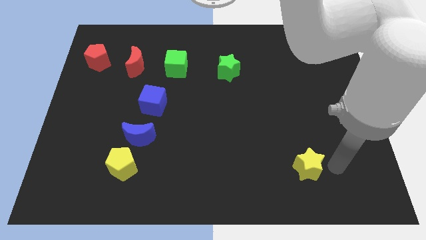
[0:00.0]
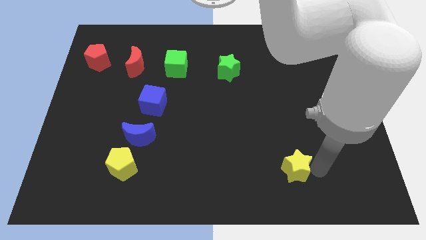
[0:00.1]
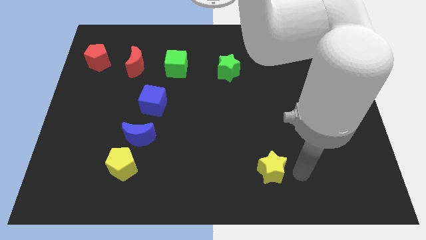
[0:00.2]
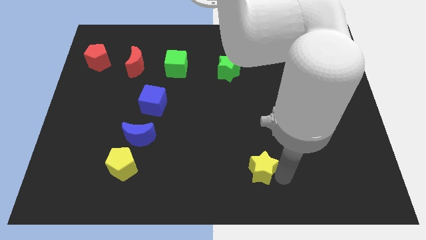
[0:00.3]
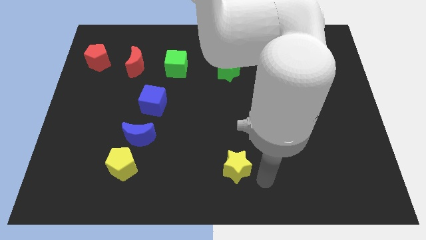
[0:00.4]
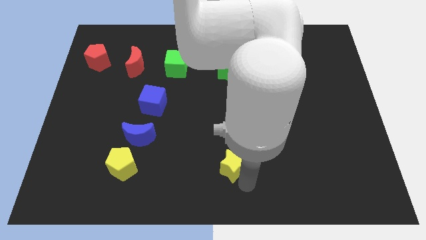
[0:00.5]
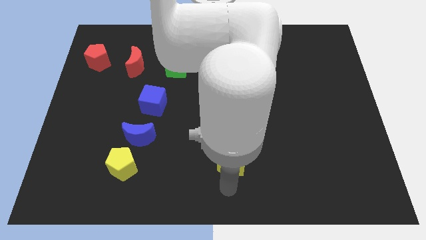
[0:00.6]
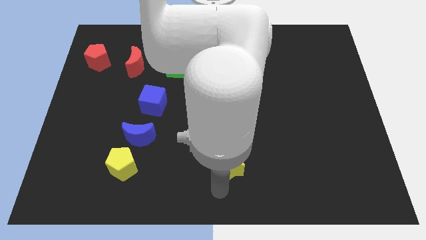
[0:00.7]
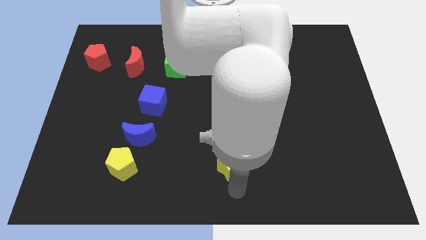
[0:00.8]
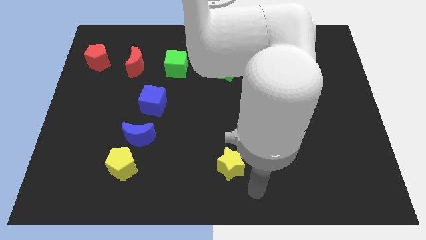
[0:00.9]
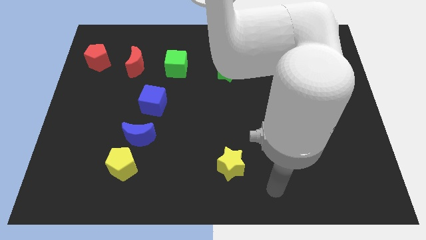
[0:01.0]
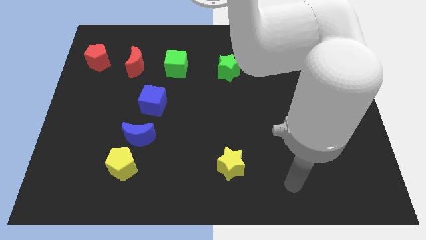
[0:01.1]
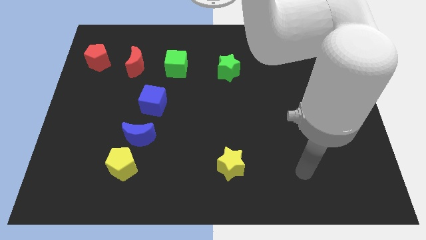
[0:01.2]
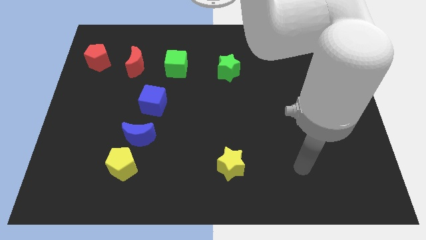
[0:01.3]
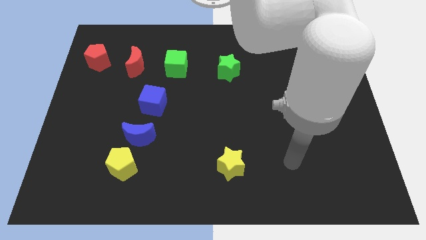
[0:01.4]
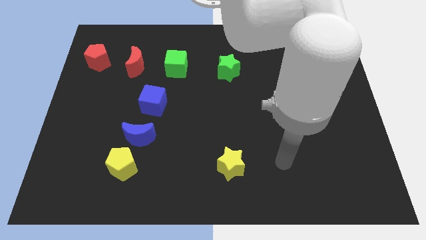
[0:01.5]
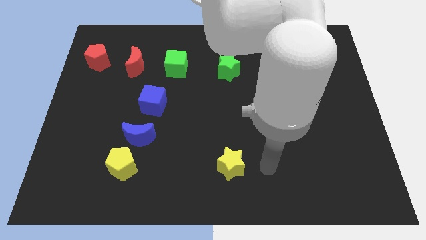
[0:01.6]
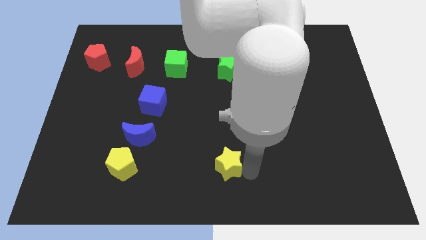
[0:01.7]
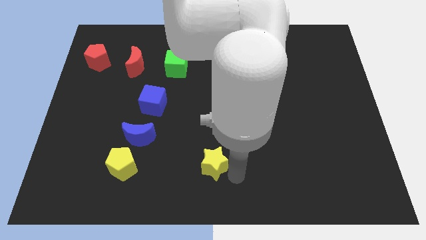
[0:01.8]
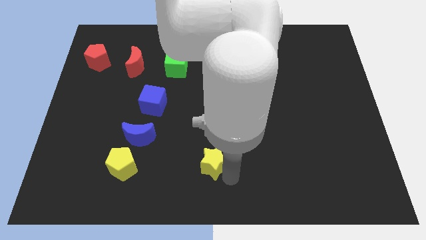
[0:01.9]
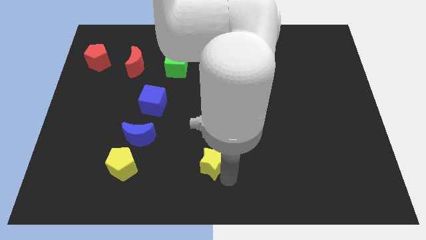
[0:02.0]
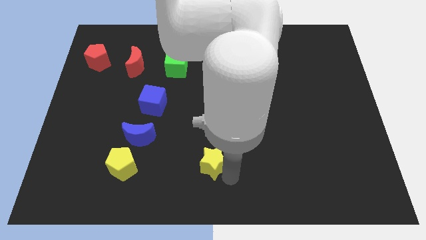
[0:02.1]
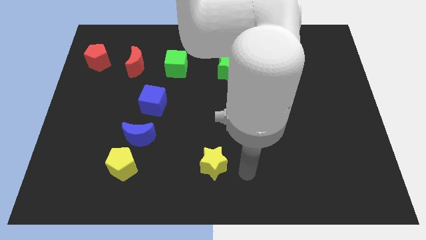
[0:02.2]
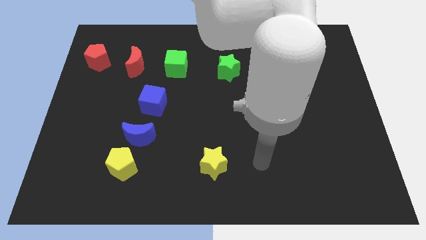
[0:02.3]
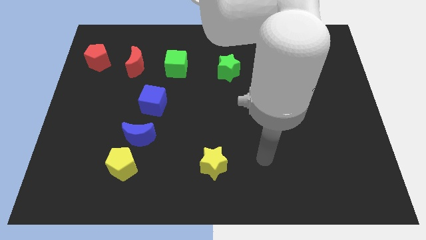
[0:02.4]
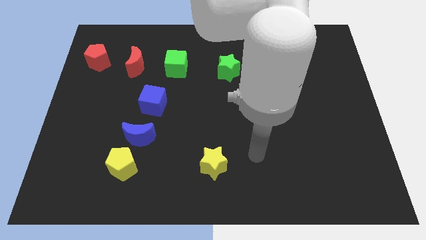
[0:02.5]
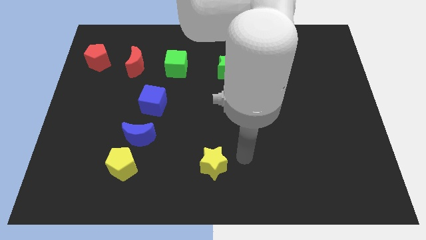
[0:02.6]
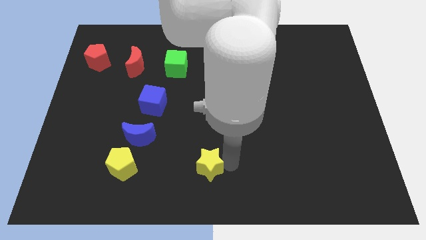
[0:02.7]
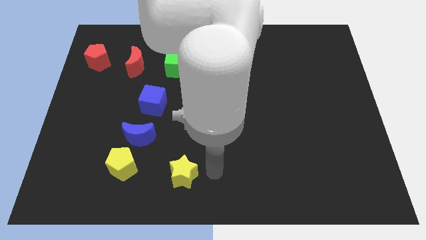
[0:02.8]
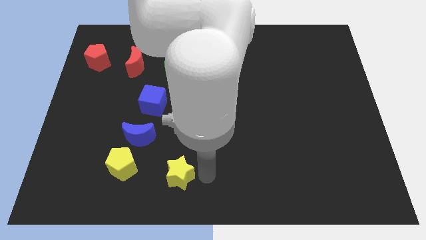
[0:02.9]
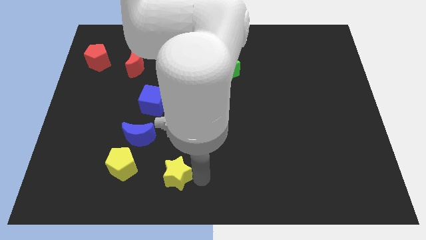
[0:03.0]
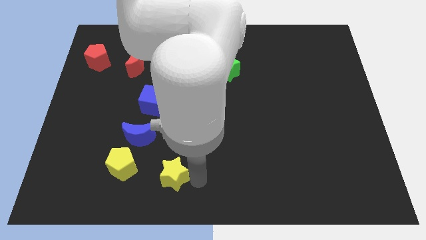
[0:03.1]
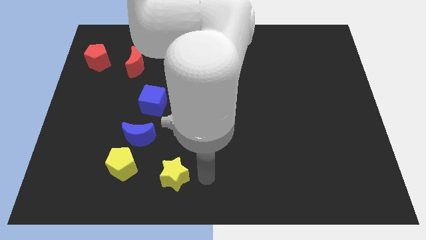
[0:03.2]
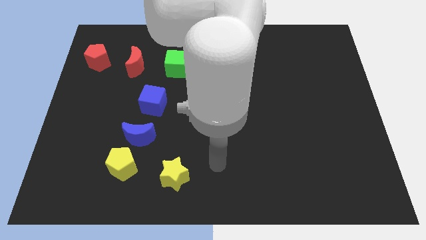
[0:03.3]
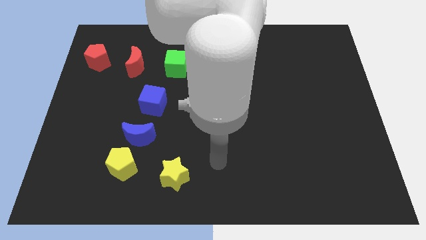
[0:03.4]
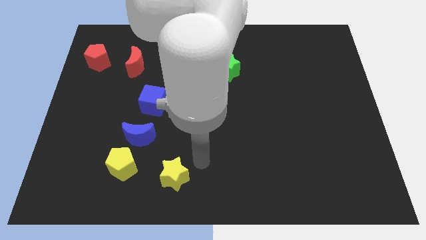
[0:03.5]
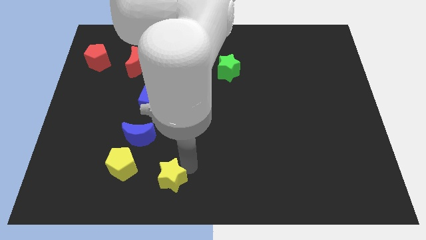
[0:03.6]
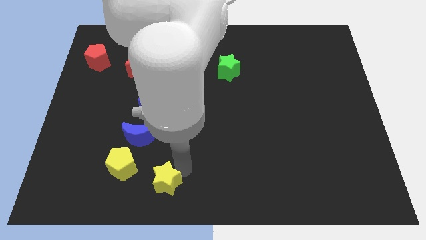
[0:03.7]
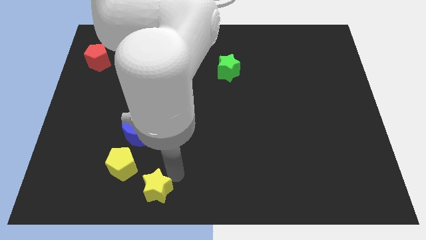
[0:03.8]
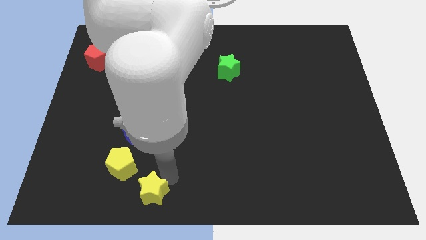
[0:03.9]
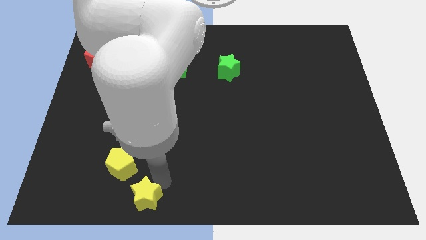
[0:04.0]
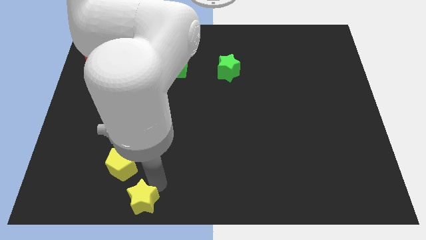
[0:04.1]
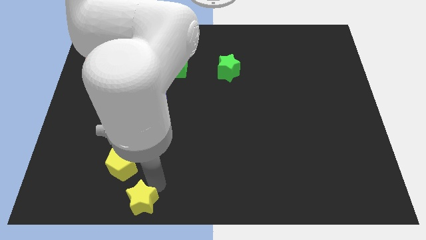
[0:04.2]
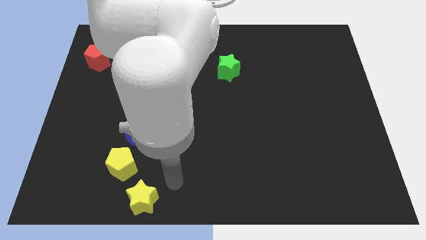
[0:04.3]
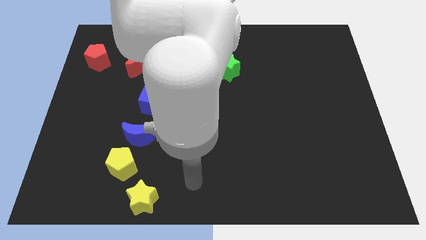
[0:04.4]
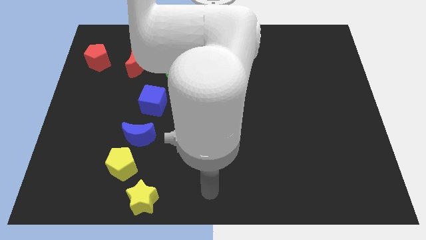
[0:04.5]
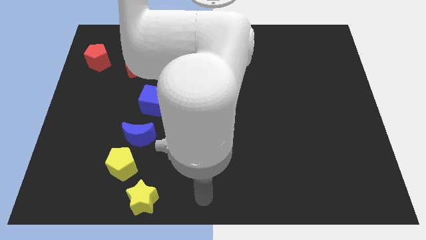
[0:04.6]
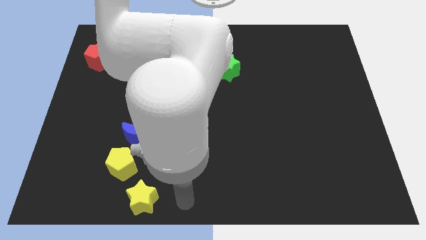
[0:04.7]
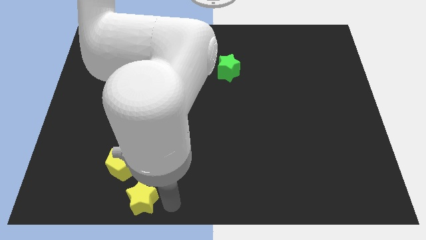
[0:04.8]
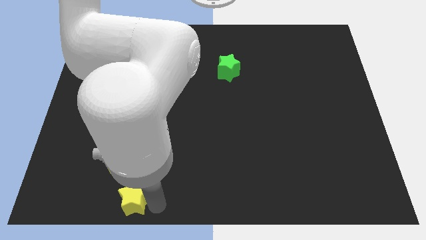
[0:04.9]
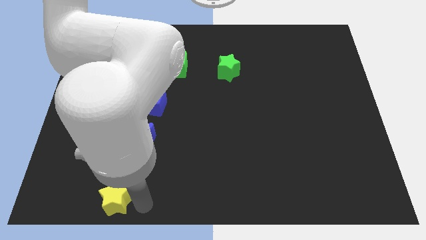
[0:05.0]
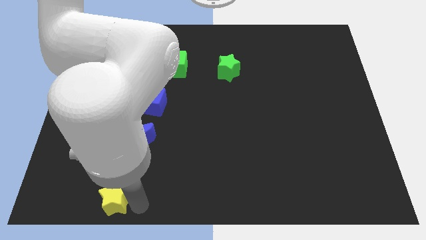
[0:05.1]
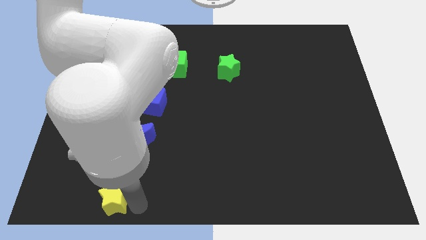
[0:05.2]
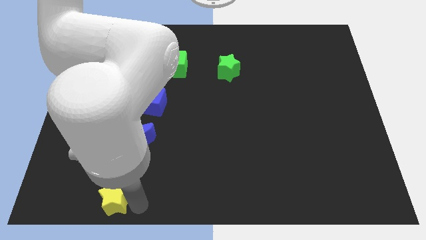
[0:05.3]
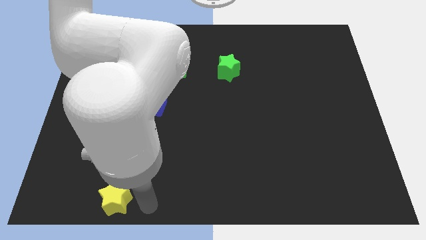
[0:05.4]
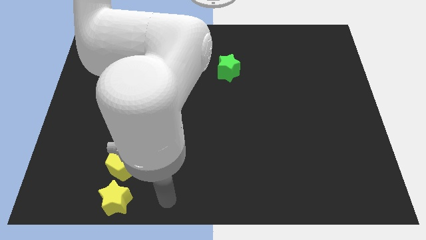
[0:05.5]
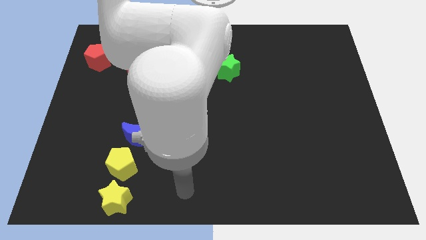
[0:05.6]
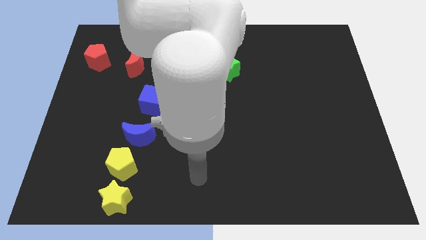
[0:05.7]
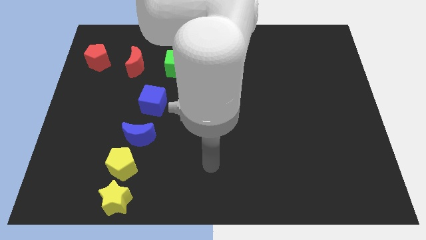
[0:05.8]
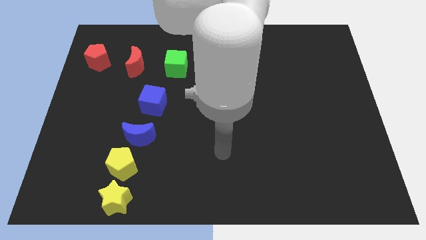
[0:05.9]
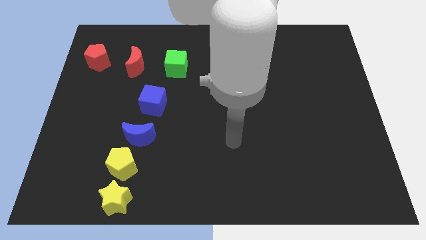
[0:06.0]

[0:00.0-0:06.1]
place yellow star below yellow pentagon

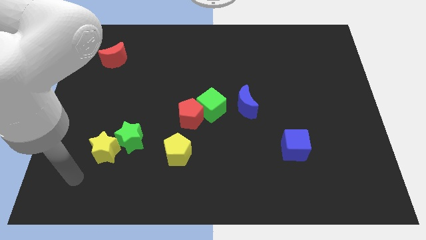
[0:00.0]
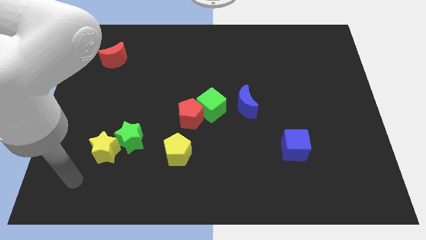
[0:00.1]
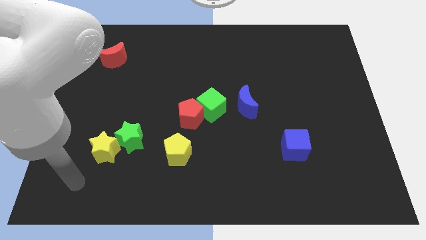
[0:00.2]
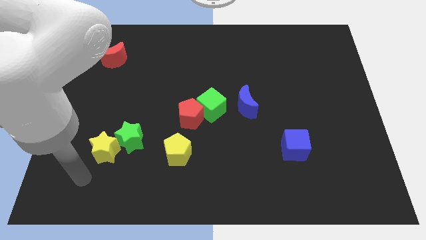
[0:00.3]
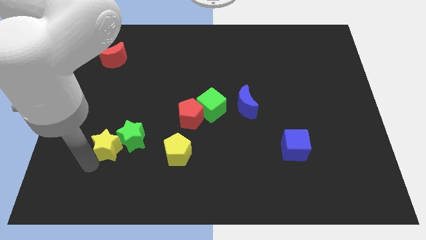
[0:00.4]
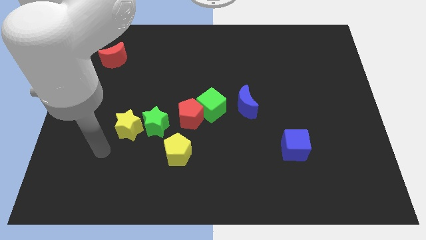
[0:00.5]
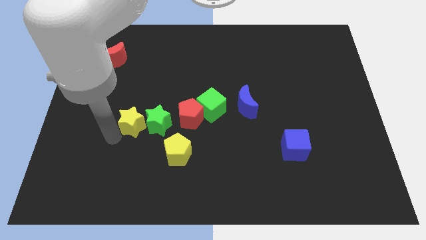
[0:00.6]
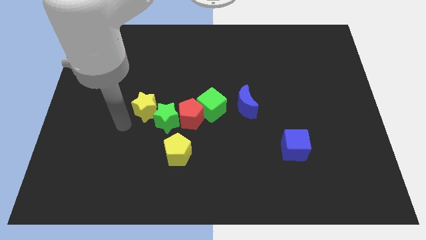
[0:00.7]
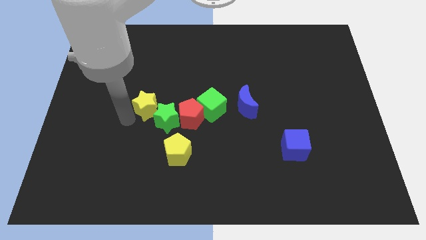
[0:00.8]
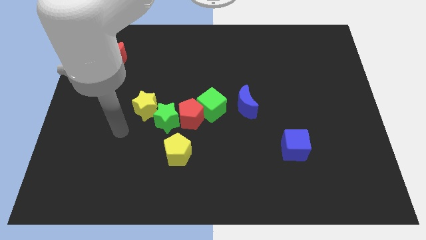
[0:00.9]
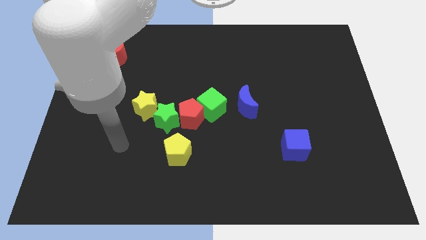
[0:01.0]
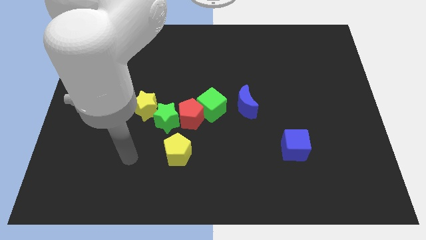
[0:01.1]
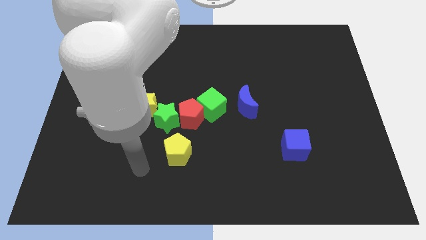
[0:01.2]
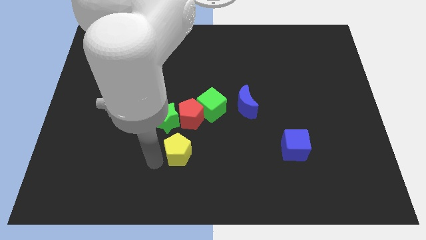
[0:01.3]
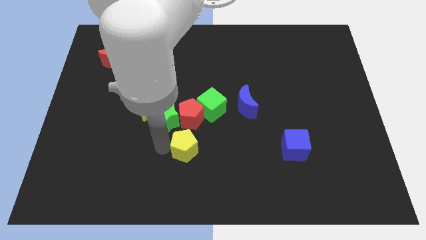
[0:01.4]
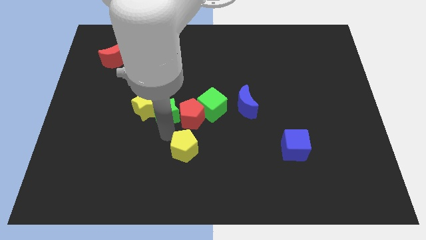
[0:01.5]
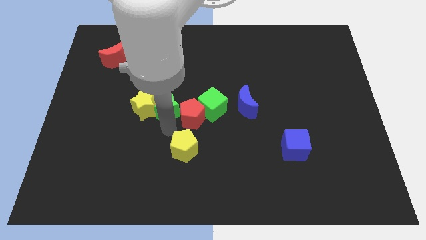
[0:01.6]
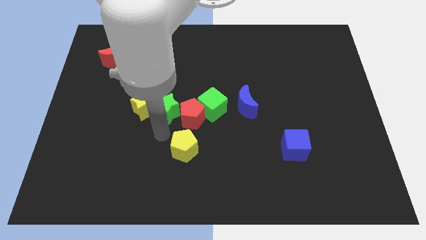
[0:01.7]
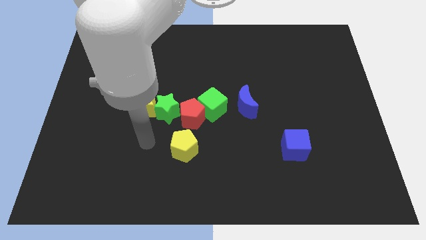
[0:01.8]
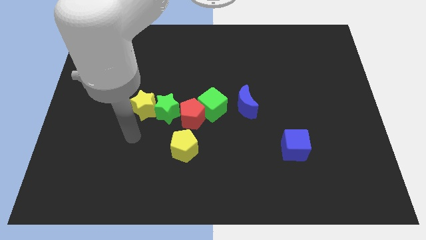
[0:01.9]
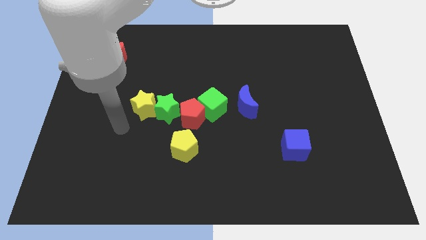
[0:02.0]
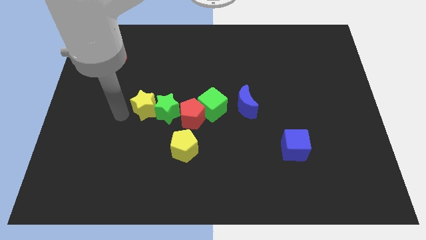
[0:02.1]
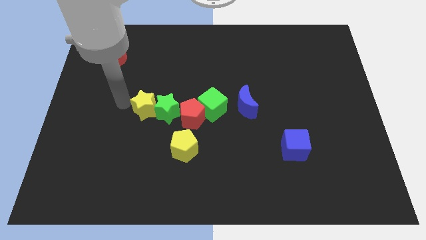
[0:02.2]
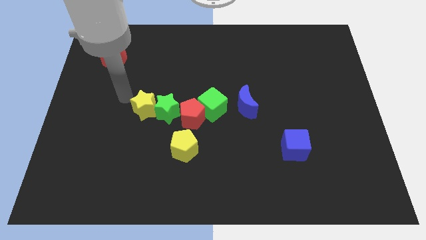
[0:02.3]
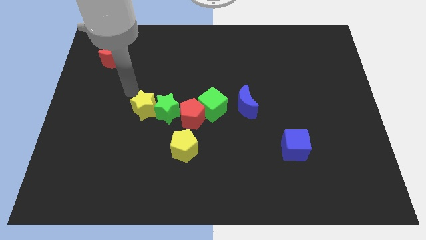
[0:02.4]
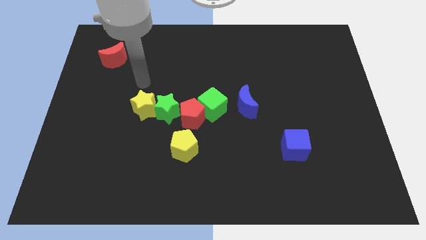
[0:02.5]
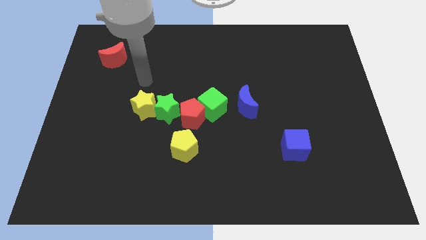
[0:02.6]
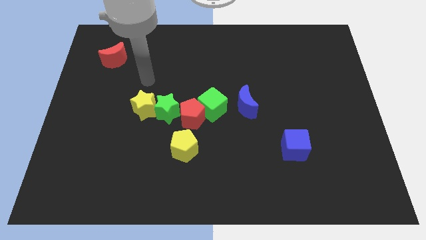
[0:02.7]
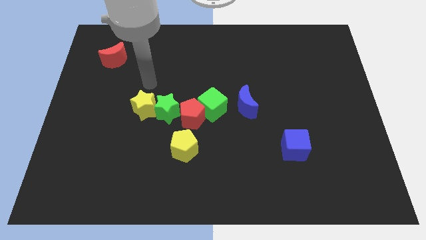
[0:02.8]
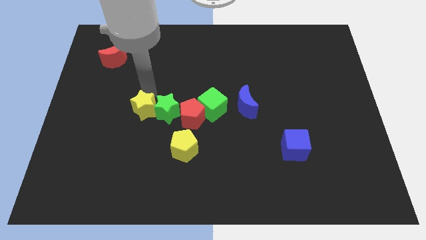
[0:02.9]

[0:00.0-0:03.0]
push the green star along with the yellow star to the left side of the red pentagon
